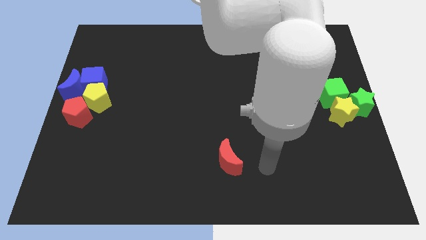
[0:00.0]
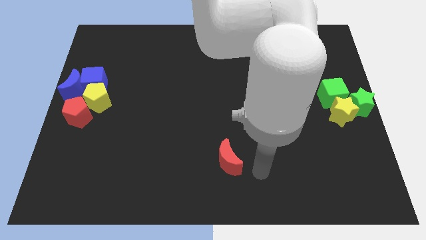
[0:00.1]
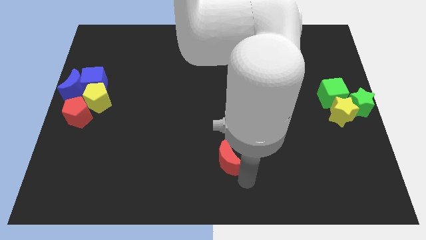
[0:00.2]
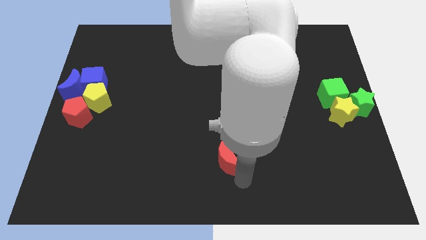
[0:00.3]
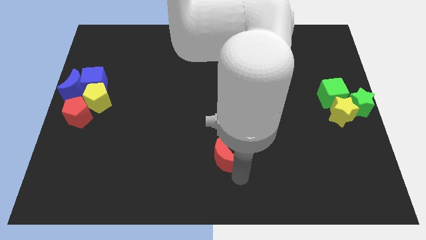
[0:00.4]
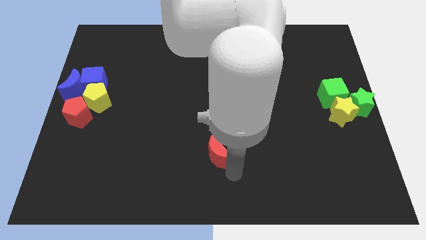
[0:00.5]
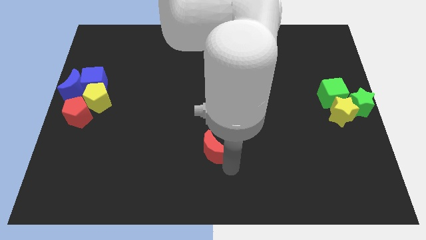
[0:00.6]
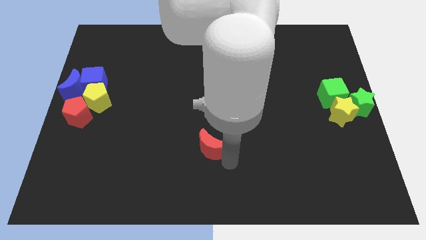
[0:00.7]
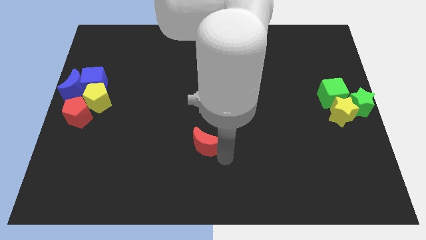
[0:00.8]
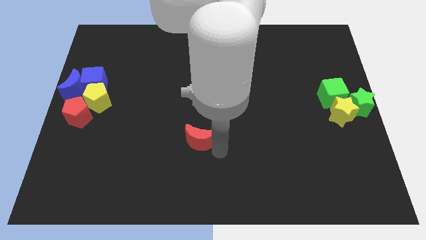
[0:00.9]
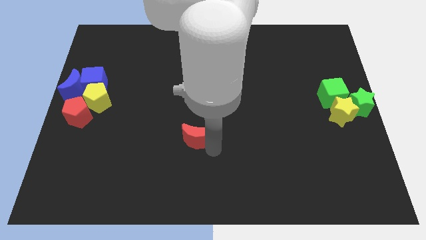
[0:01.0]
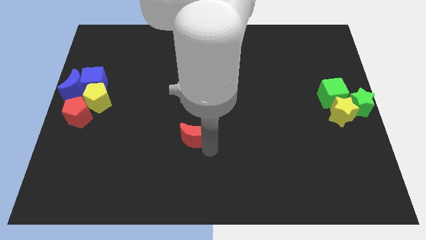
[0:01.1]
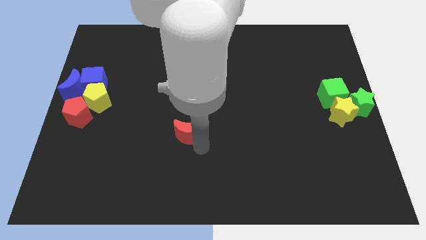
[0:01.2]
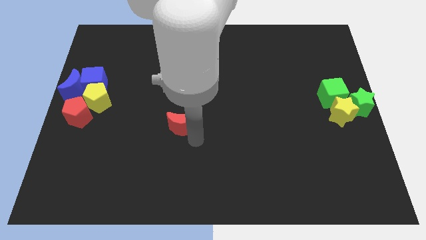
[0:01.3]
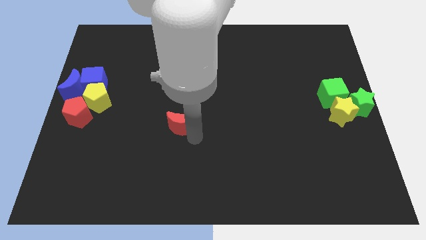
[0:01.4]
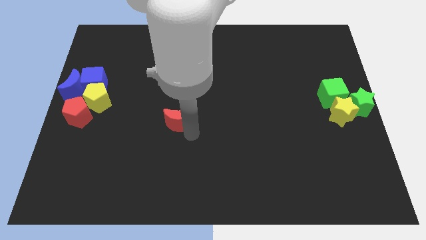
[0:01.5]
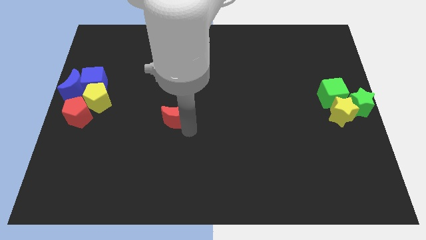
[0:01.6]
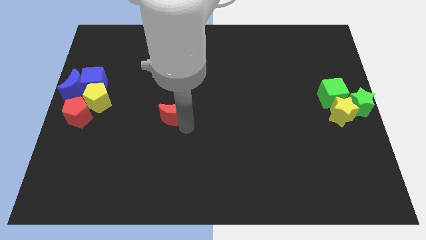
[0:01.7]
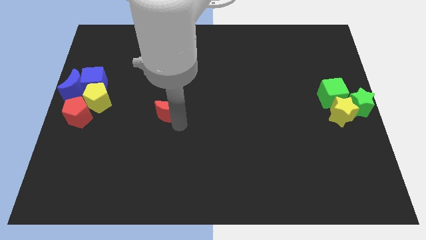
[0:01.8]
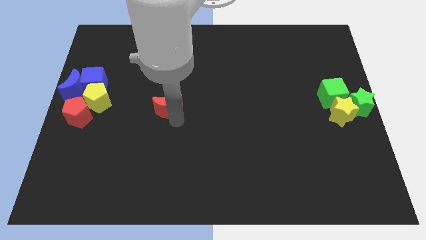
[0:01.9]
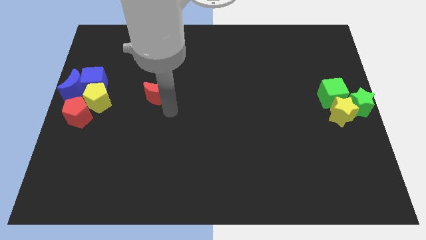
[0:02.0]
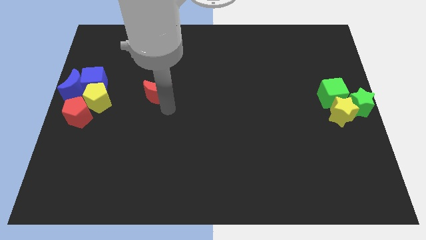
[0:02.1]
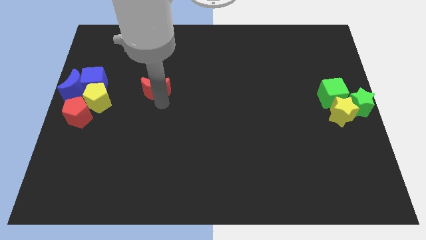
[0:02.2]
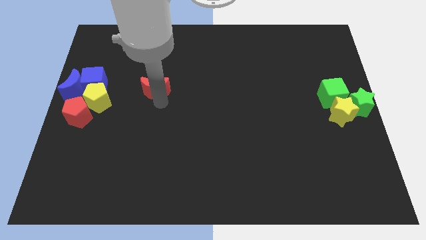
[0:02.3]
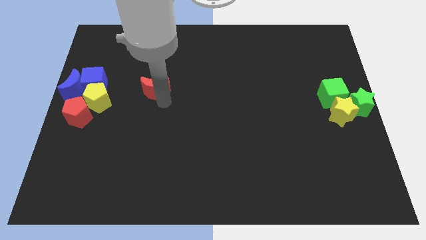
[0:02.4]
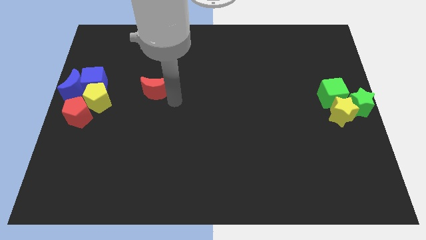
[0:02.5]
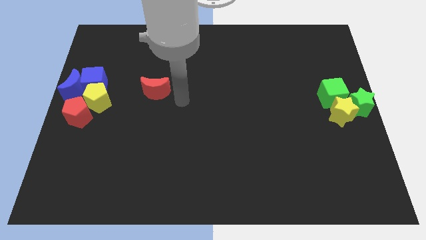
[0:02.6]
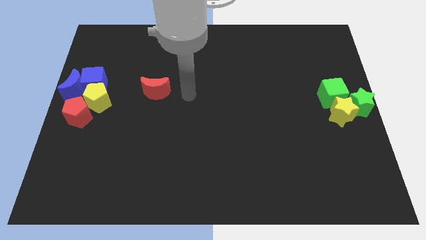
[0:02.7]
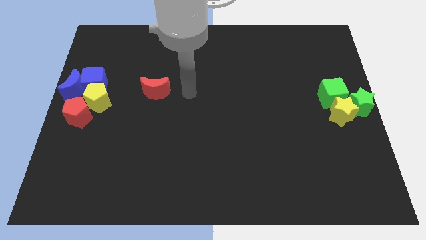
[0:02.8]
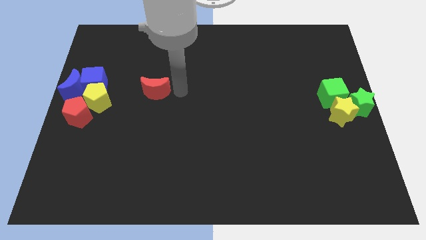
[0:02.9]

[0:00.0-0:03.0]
push the red crescent diagonally towards blue cube

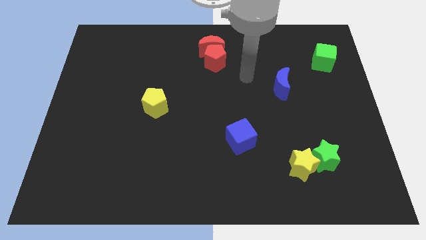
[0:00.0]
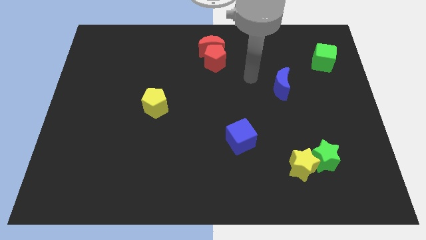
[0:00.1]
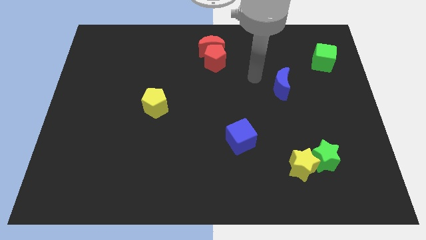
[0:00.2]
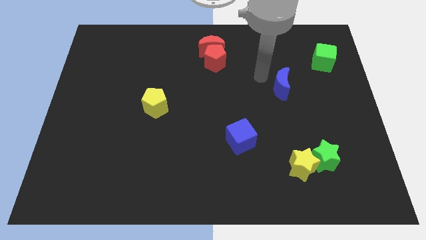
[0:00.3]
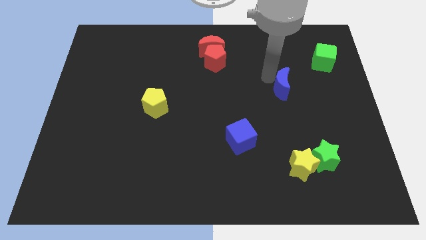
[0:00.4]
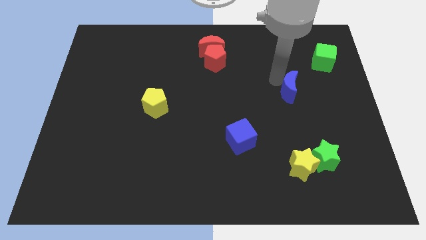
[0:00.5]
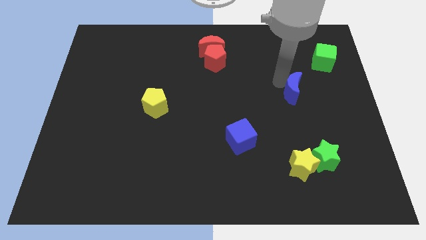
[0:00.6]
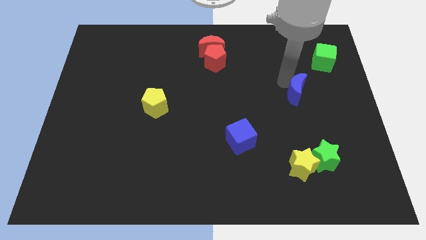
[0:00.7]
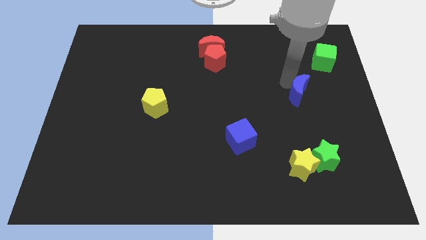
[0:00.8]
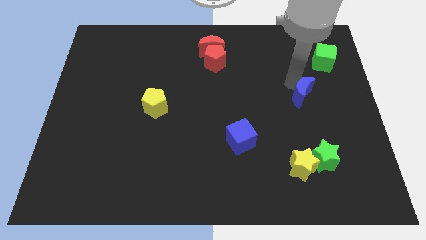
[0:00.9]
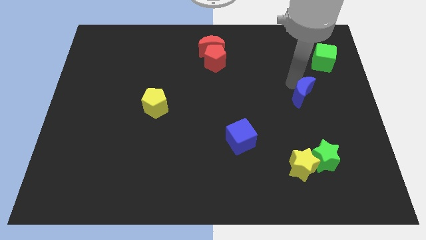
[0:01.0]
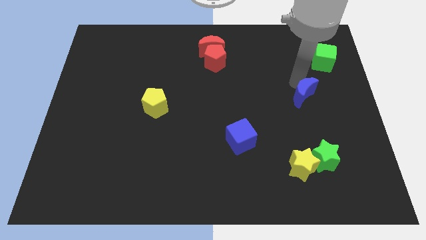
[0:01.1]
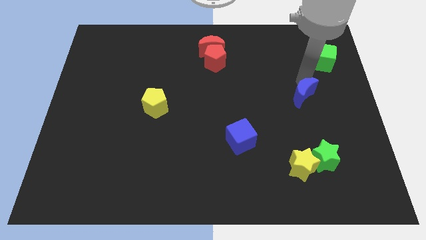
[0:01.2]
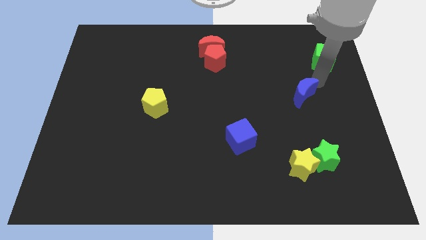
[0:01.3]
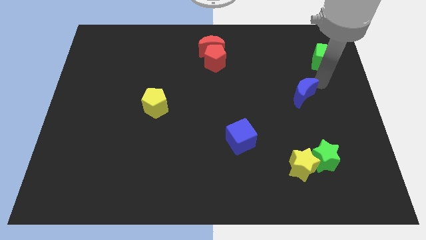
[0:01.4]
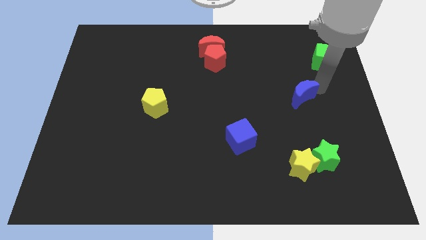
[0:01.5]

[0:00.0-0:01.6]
move the blue crescent diagonally on the bottom left side of the green cube

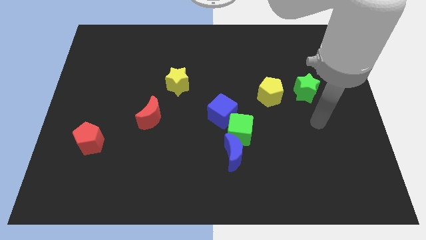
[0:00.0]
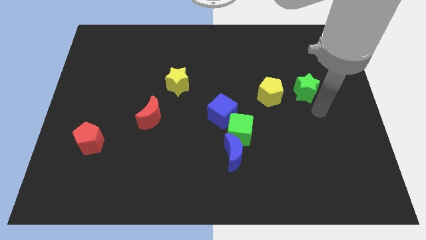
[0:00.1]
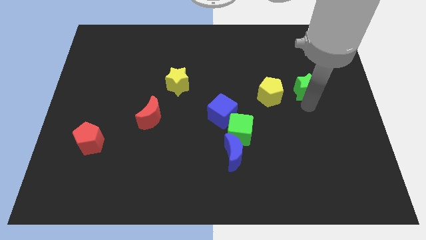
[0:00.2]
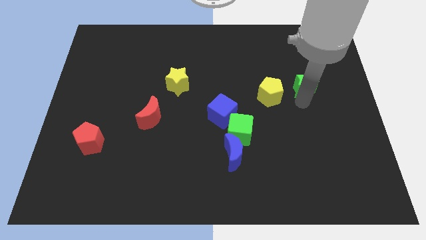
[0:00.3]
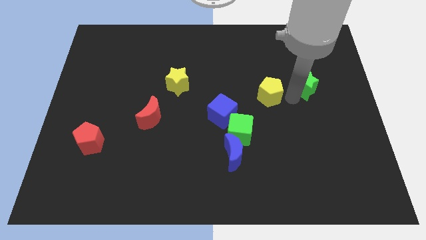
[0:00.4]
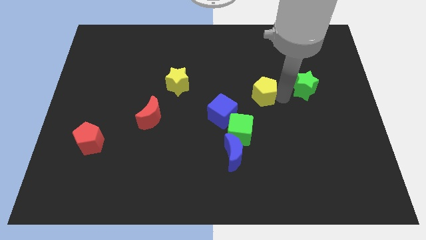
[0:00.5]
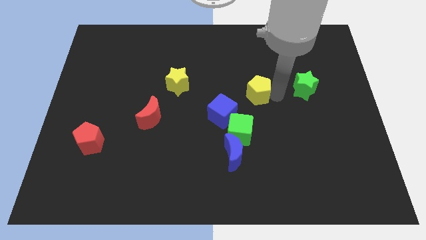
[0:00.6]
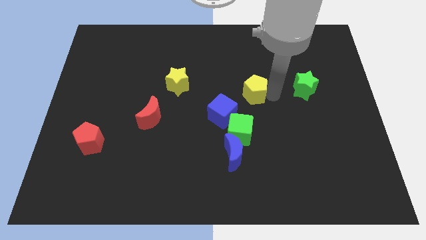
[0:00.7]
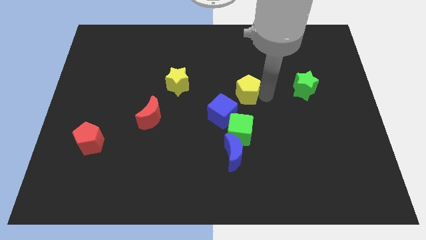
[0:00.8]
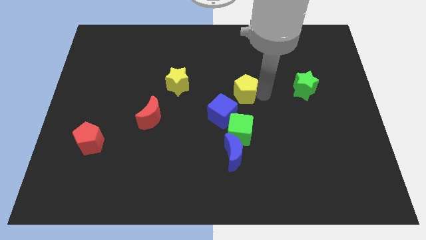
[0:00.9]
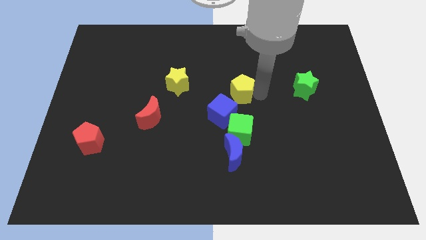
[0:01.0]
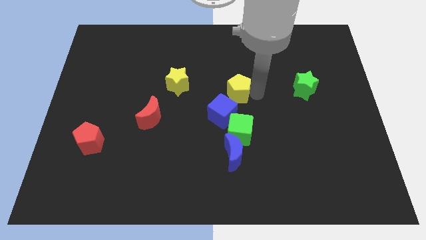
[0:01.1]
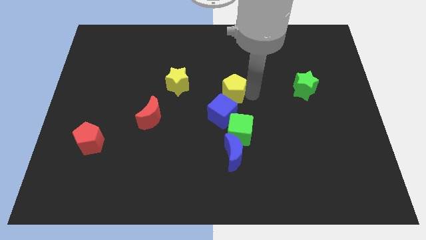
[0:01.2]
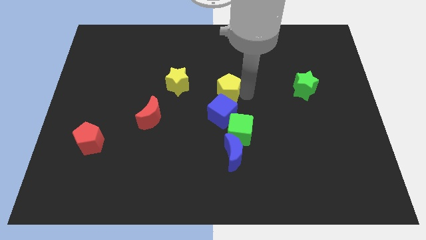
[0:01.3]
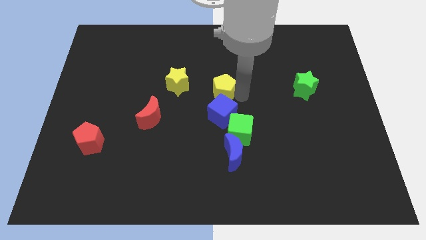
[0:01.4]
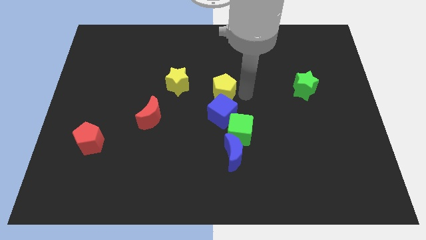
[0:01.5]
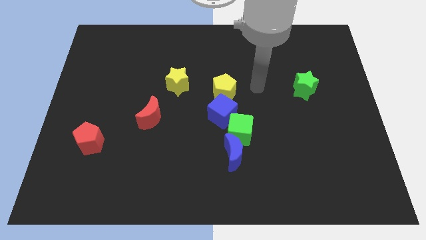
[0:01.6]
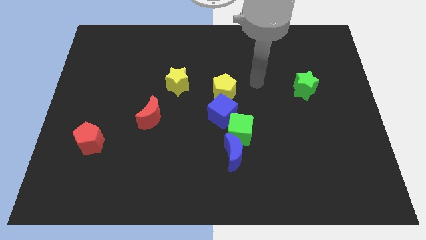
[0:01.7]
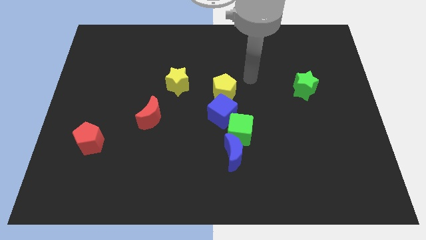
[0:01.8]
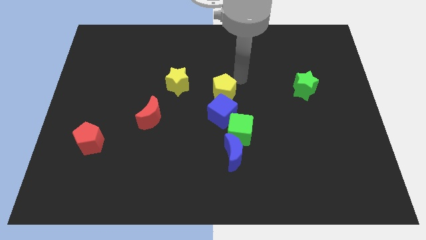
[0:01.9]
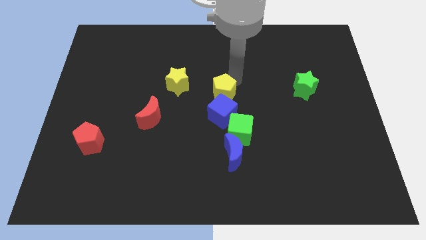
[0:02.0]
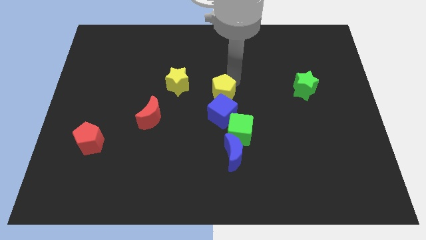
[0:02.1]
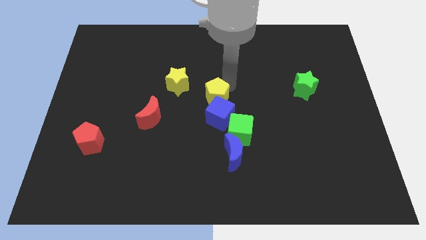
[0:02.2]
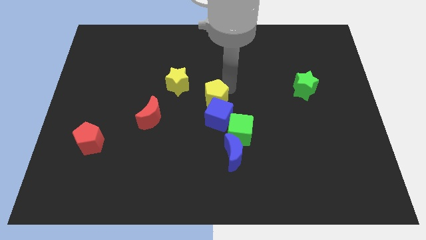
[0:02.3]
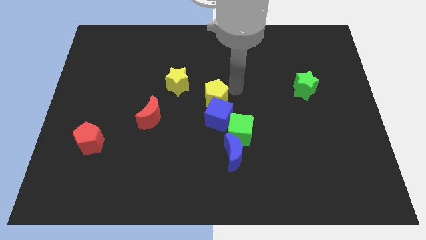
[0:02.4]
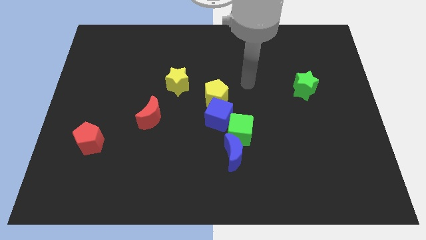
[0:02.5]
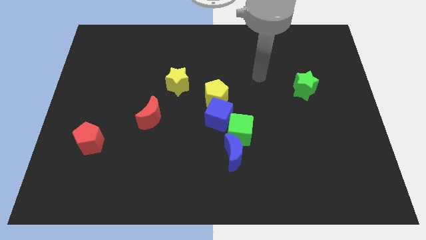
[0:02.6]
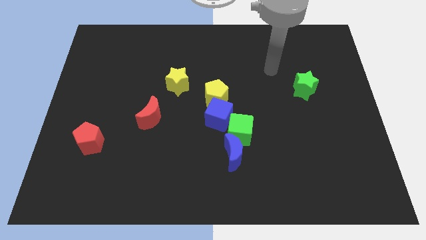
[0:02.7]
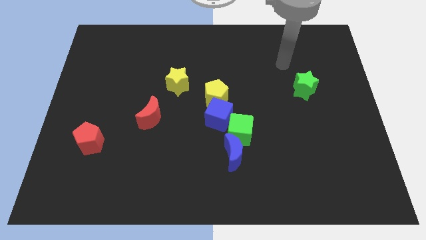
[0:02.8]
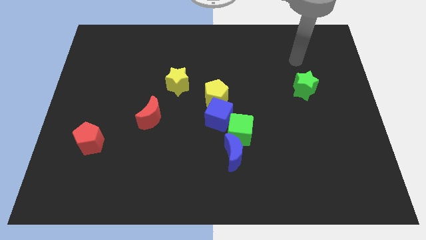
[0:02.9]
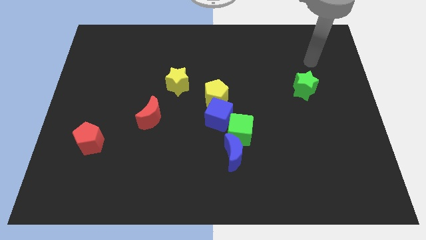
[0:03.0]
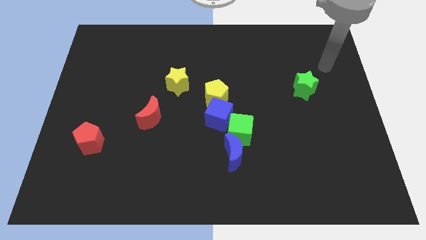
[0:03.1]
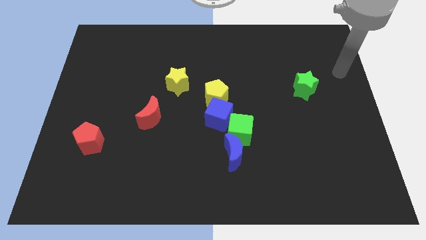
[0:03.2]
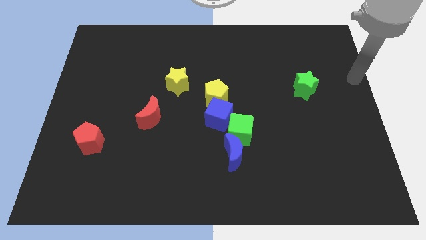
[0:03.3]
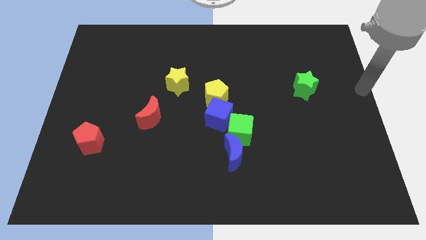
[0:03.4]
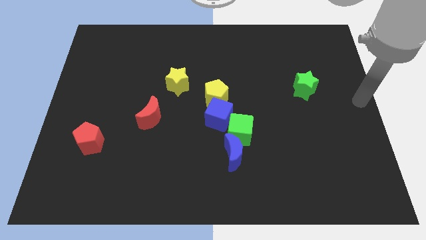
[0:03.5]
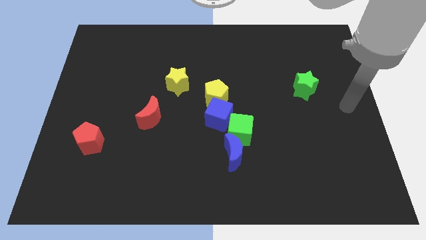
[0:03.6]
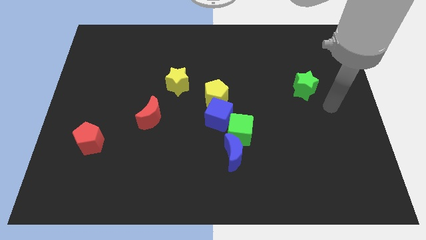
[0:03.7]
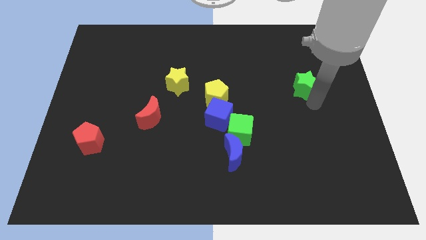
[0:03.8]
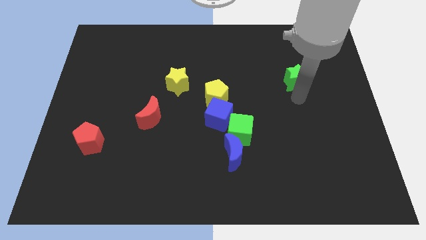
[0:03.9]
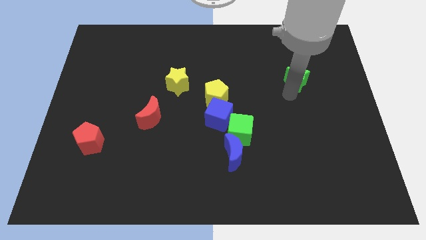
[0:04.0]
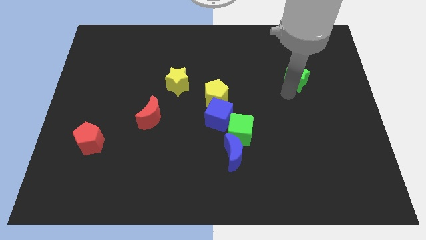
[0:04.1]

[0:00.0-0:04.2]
place the yellow pentagon above the blue cube

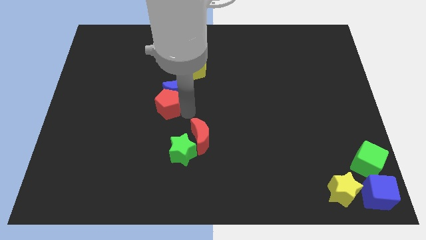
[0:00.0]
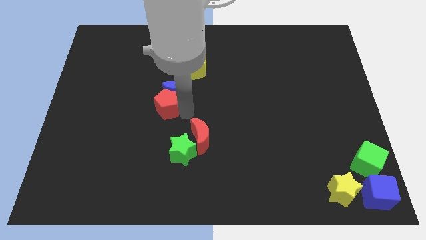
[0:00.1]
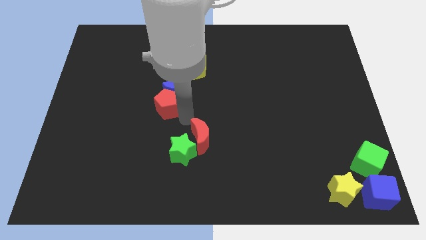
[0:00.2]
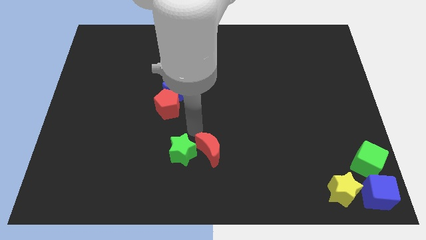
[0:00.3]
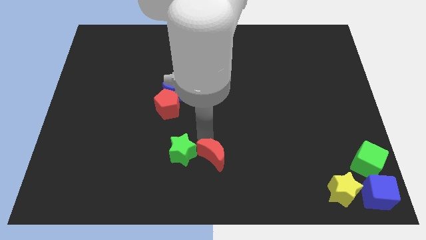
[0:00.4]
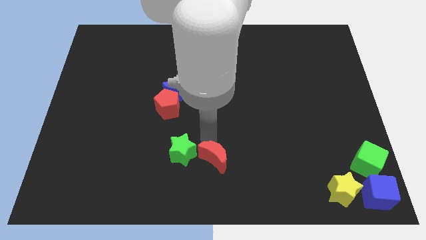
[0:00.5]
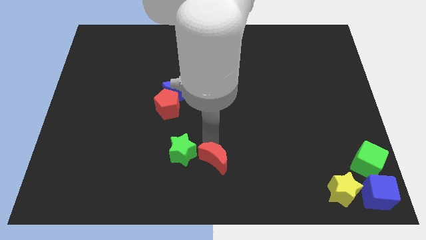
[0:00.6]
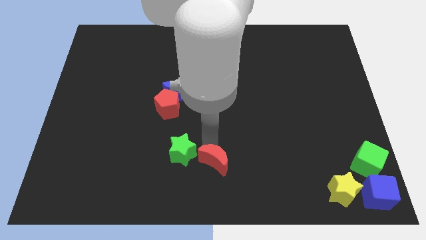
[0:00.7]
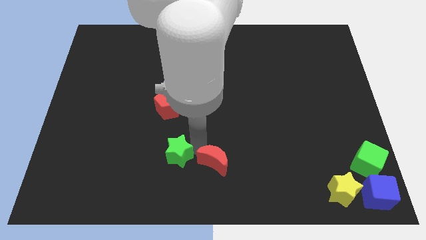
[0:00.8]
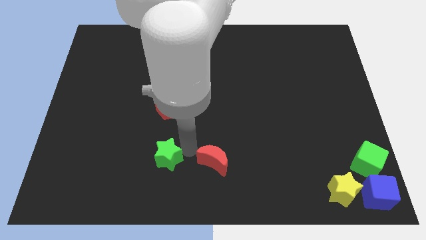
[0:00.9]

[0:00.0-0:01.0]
push the red crescent to the right of the green star
